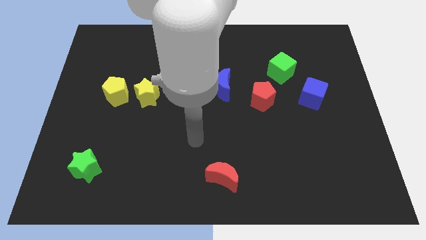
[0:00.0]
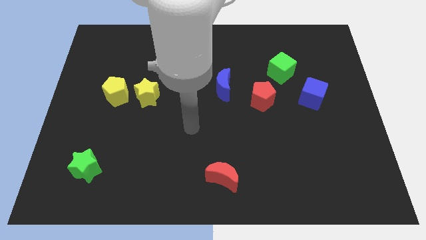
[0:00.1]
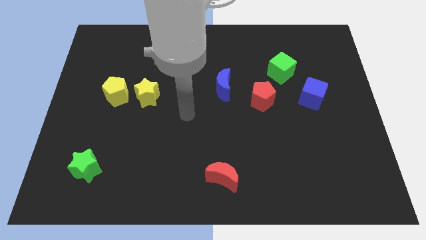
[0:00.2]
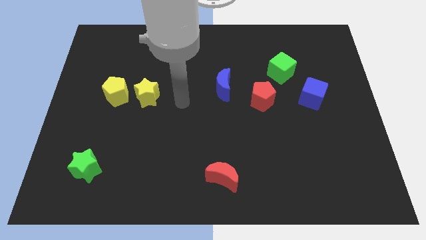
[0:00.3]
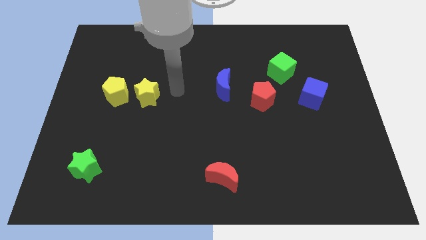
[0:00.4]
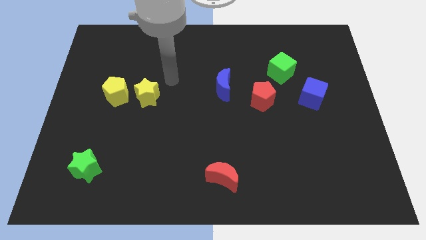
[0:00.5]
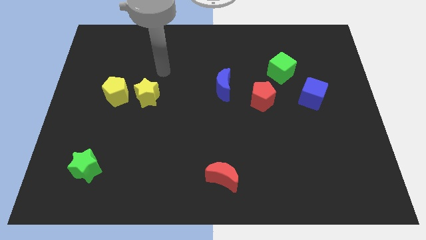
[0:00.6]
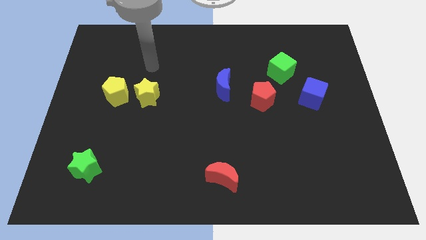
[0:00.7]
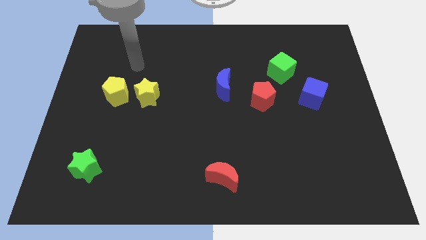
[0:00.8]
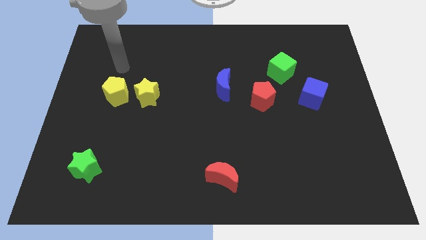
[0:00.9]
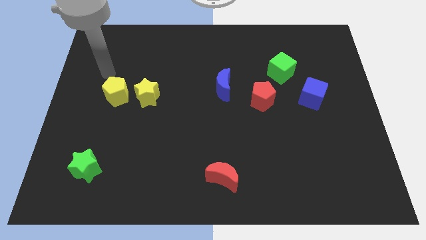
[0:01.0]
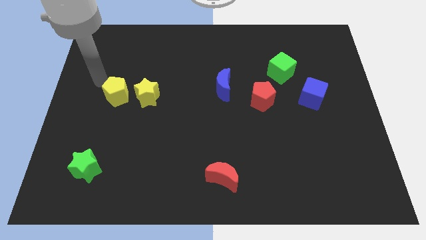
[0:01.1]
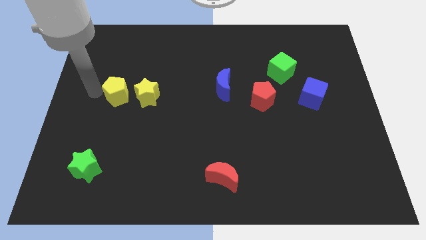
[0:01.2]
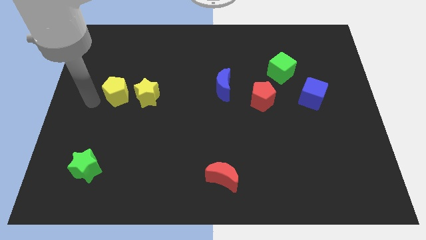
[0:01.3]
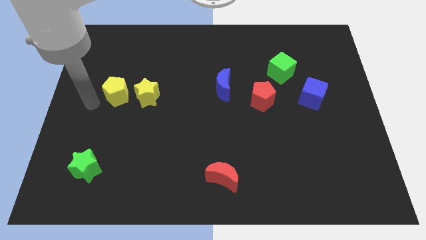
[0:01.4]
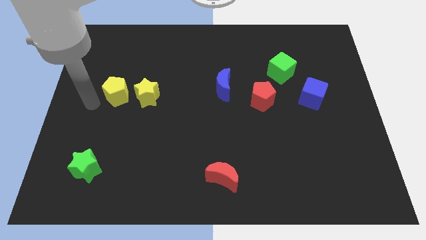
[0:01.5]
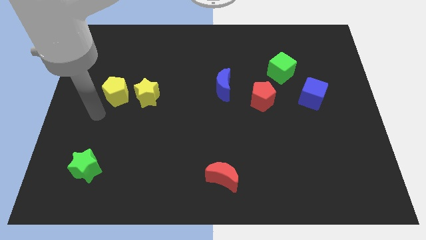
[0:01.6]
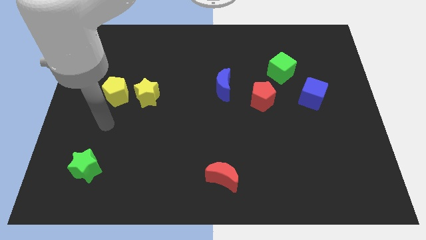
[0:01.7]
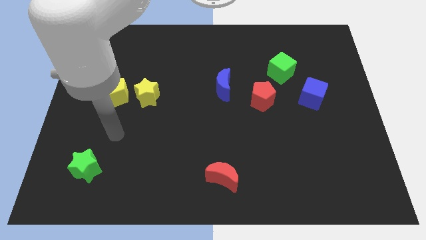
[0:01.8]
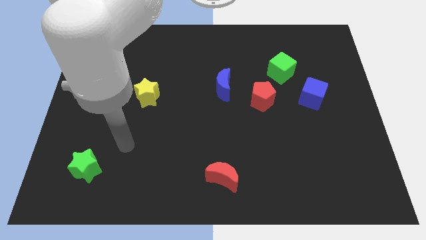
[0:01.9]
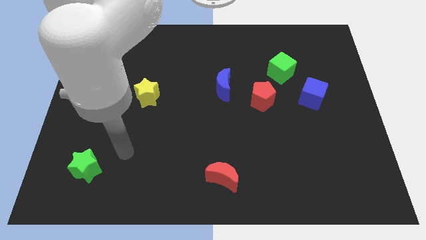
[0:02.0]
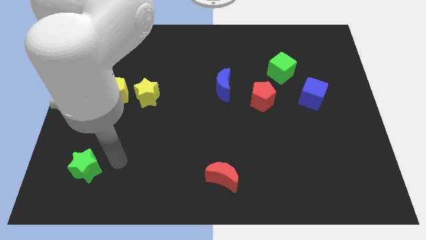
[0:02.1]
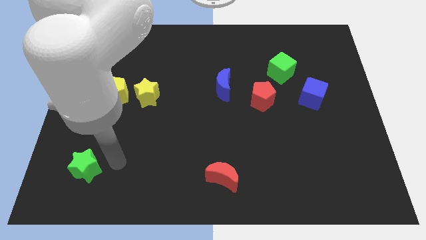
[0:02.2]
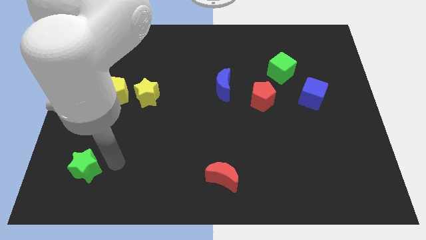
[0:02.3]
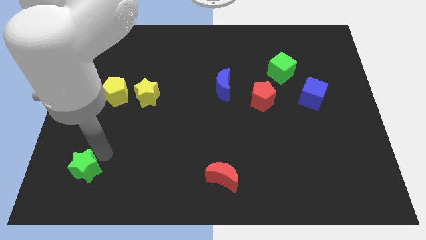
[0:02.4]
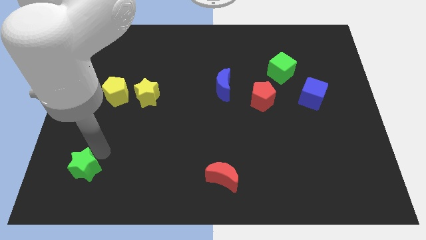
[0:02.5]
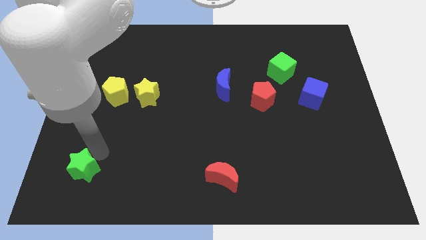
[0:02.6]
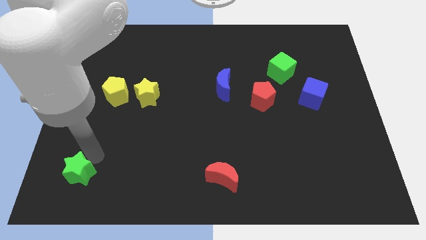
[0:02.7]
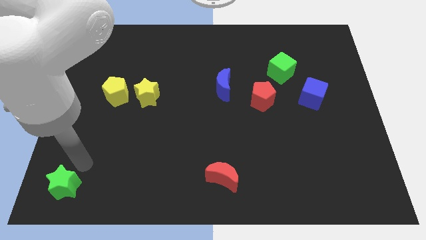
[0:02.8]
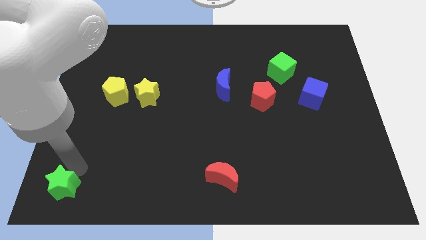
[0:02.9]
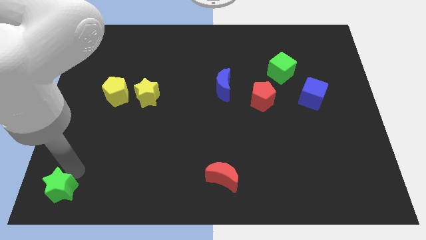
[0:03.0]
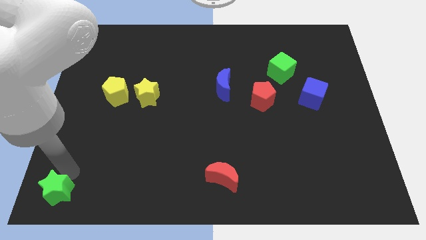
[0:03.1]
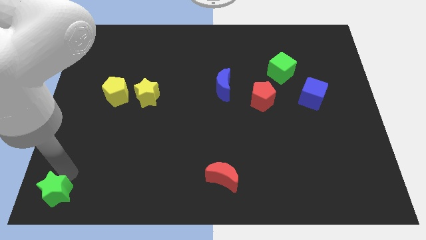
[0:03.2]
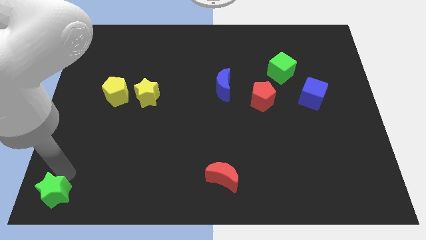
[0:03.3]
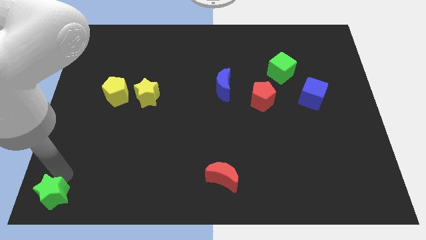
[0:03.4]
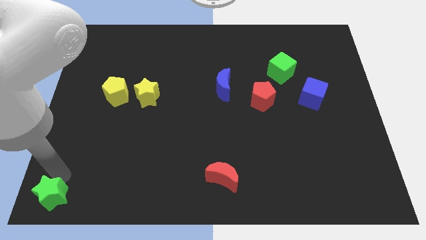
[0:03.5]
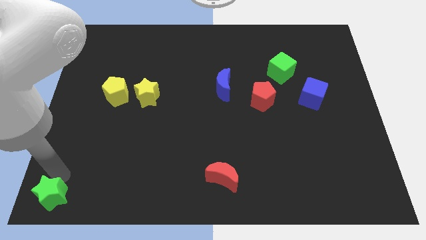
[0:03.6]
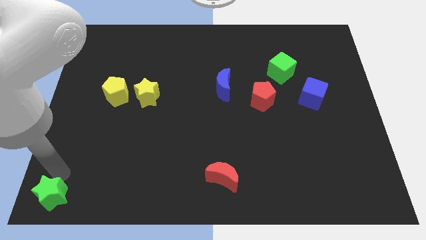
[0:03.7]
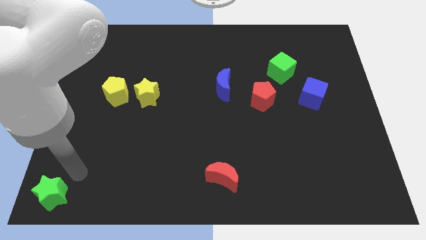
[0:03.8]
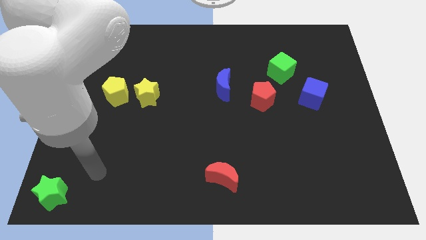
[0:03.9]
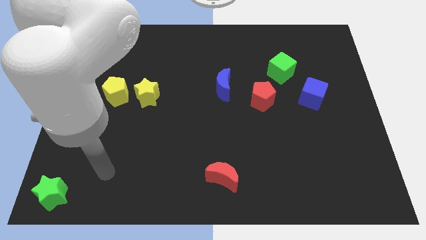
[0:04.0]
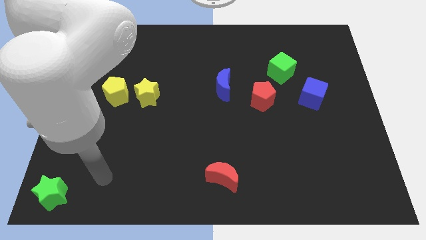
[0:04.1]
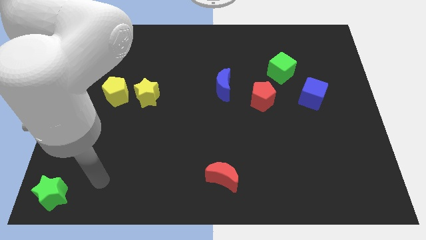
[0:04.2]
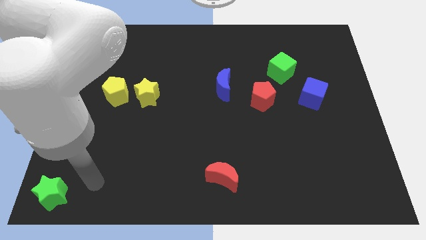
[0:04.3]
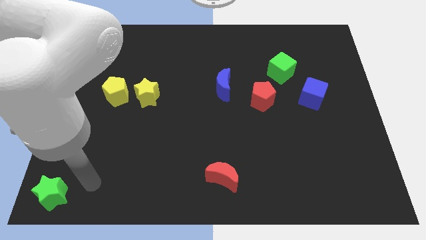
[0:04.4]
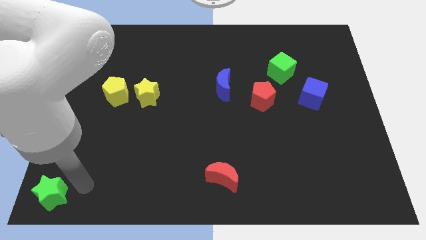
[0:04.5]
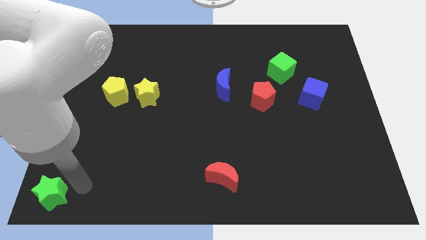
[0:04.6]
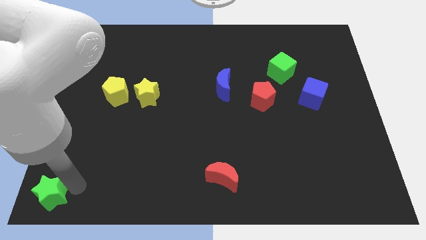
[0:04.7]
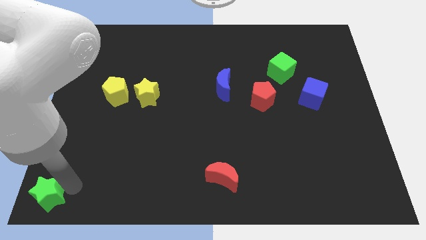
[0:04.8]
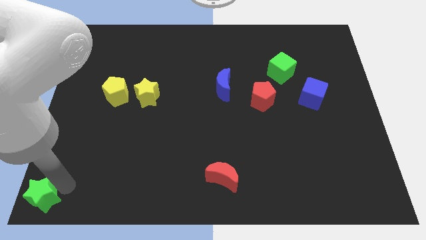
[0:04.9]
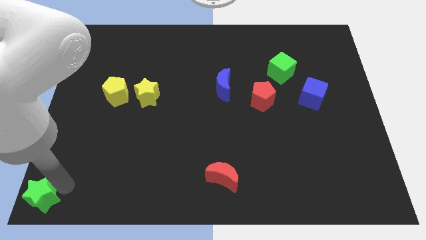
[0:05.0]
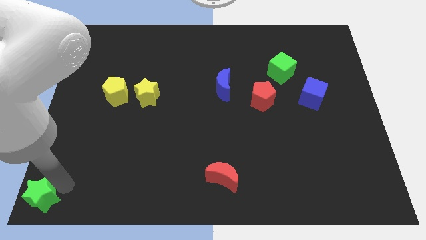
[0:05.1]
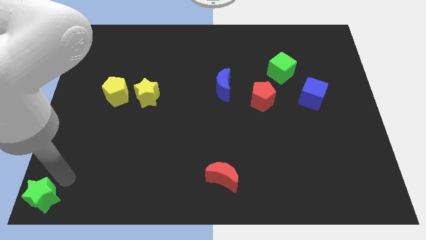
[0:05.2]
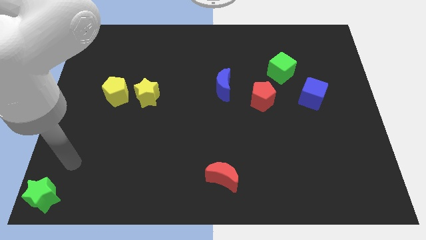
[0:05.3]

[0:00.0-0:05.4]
push the green star to the bottom left of the board

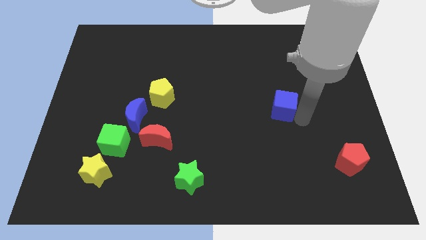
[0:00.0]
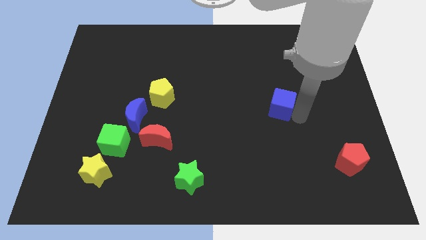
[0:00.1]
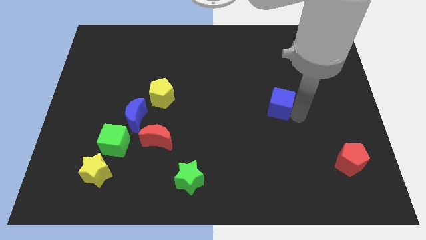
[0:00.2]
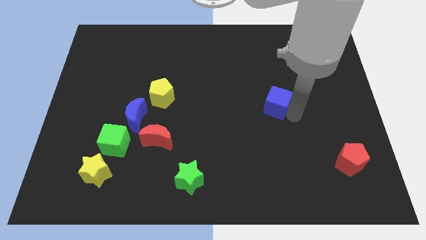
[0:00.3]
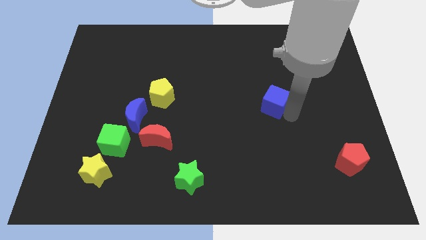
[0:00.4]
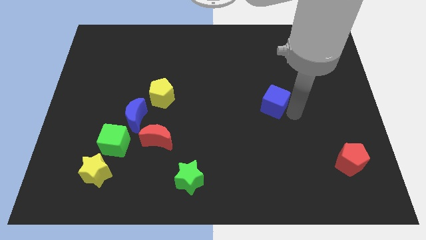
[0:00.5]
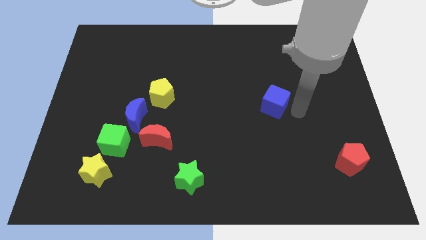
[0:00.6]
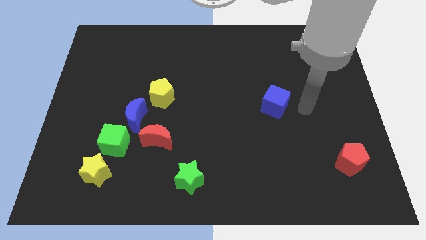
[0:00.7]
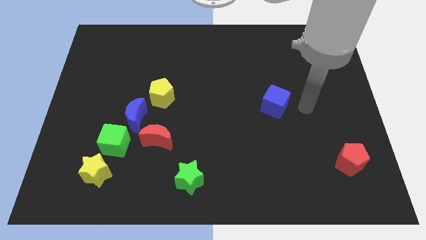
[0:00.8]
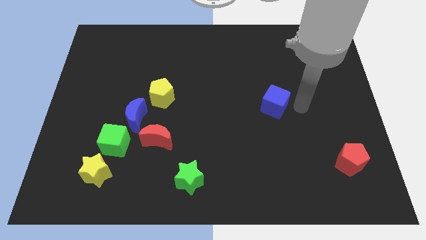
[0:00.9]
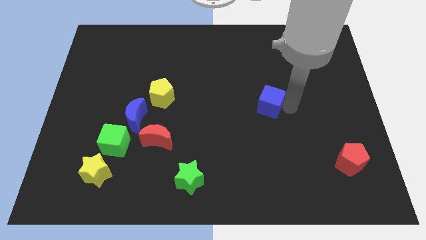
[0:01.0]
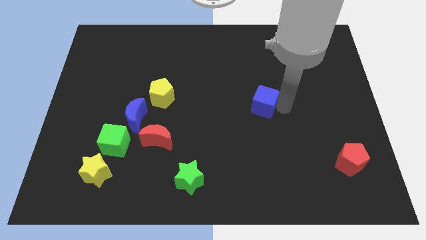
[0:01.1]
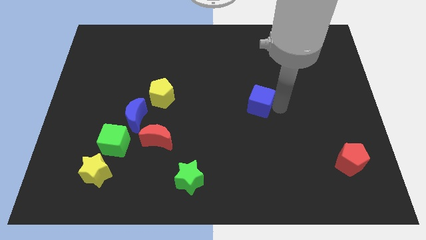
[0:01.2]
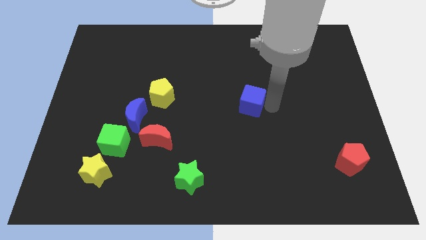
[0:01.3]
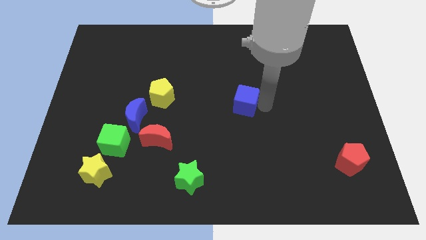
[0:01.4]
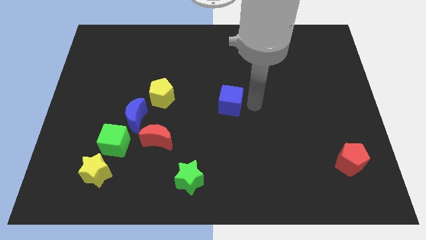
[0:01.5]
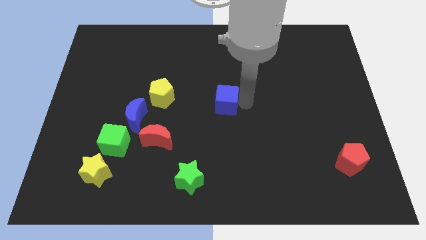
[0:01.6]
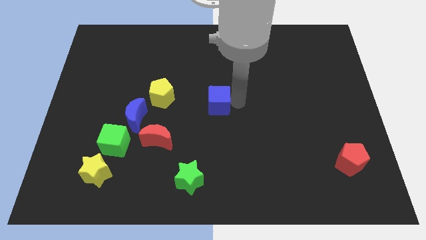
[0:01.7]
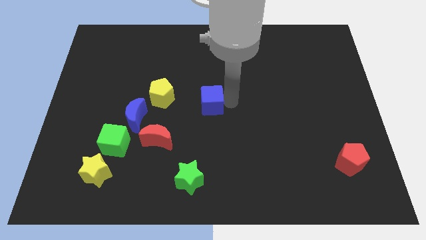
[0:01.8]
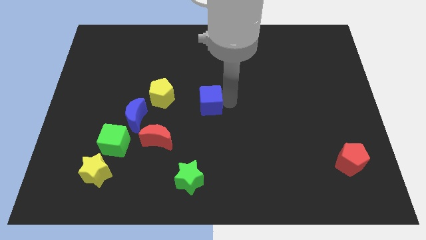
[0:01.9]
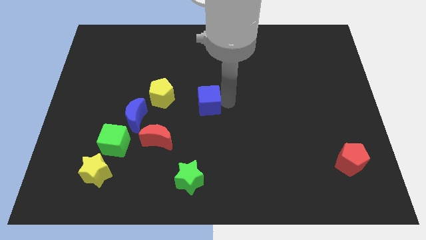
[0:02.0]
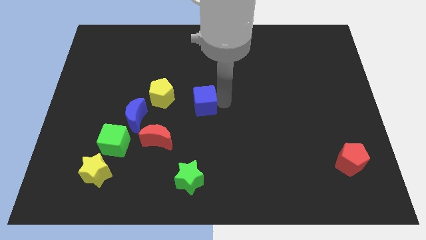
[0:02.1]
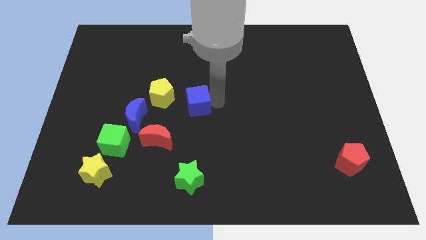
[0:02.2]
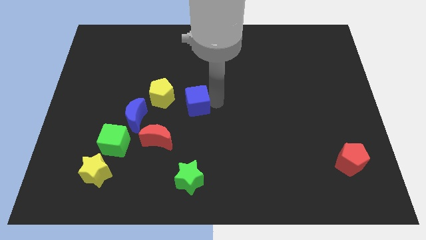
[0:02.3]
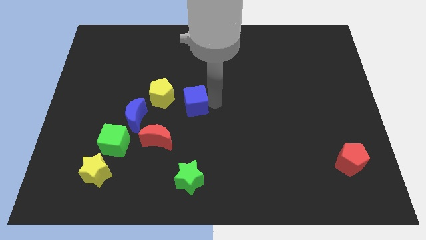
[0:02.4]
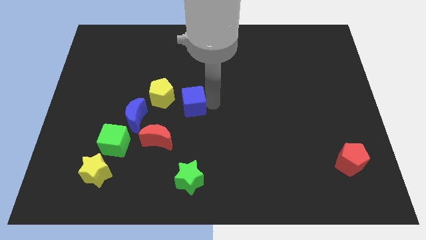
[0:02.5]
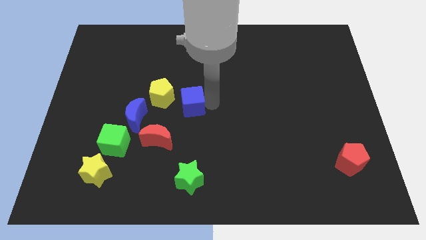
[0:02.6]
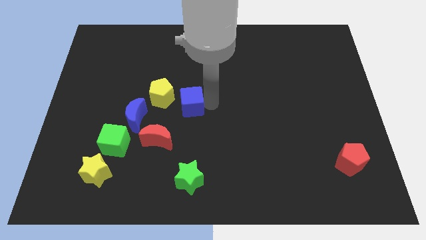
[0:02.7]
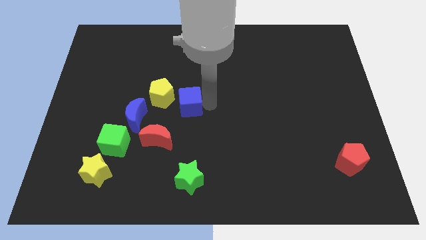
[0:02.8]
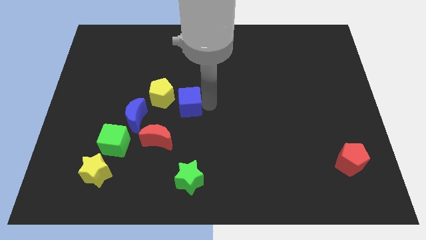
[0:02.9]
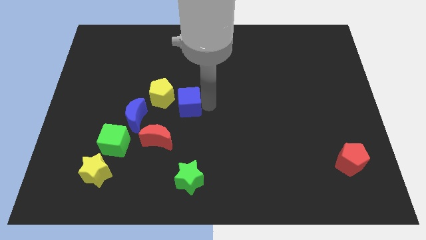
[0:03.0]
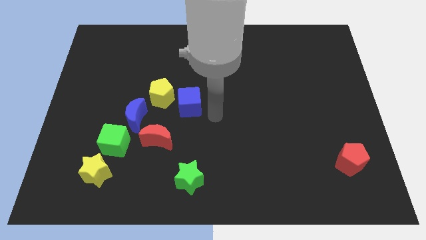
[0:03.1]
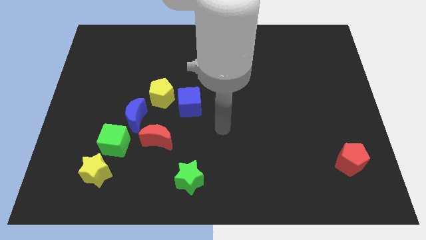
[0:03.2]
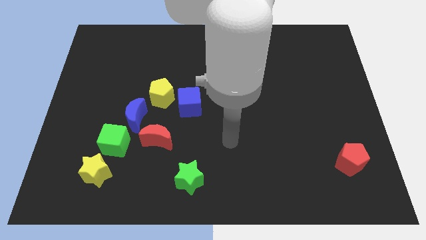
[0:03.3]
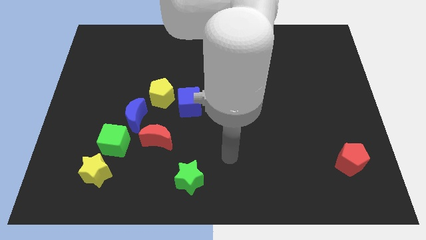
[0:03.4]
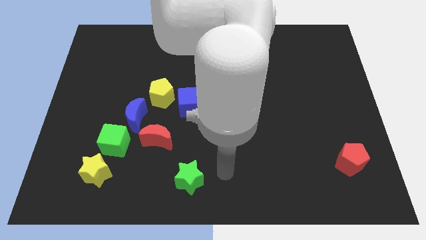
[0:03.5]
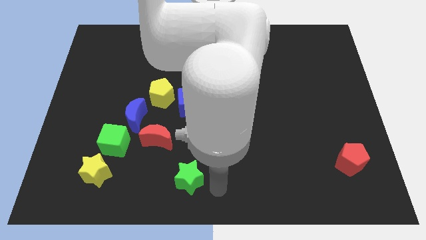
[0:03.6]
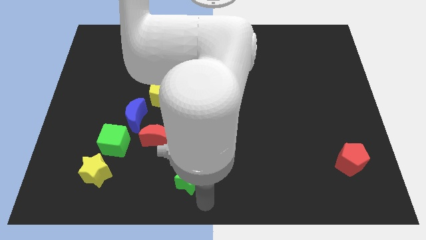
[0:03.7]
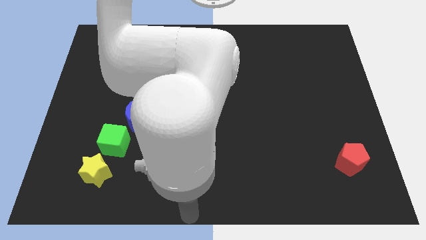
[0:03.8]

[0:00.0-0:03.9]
place the blue cube to the left of yellow pentagon
